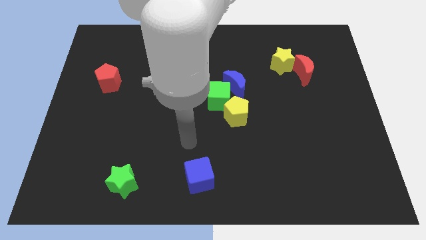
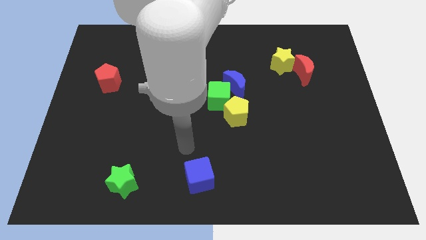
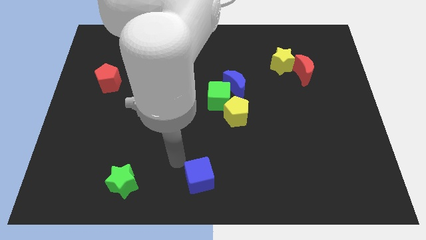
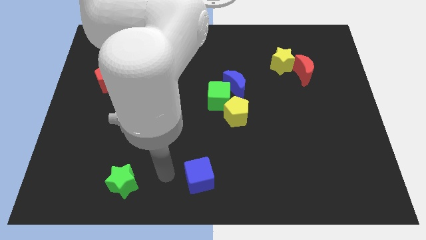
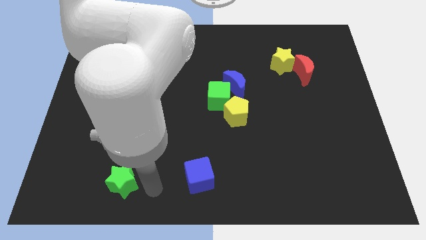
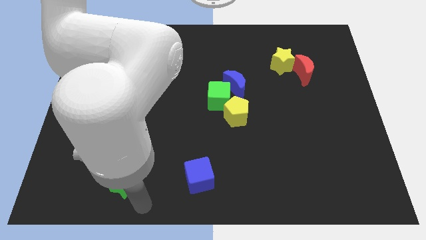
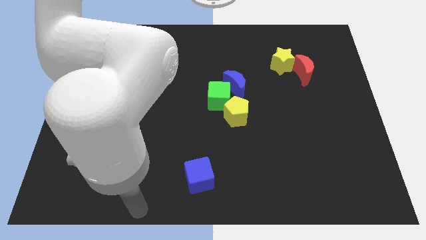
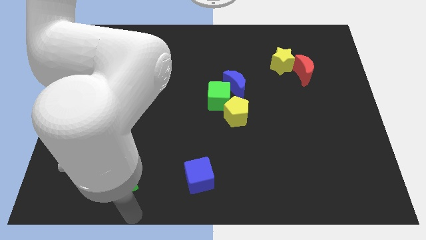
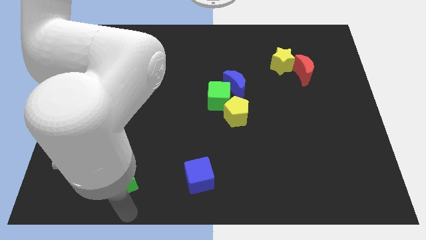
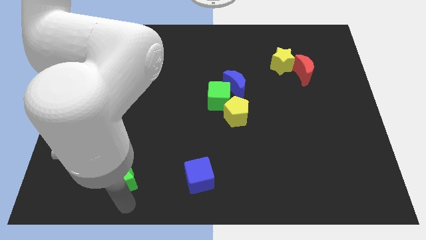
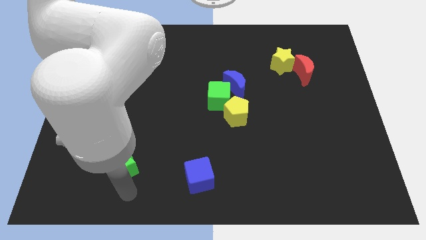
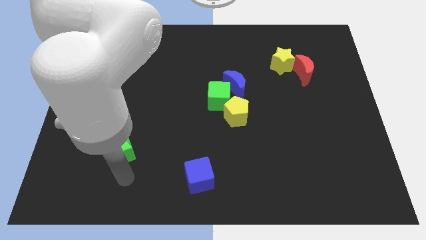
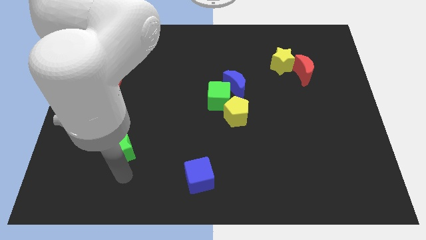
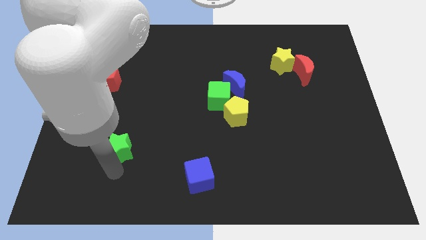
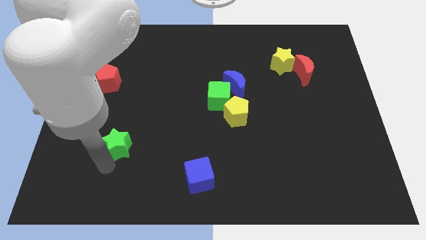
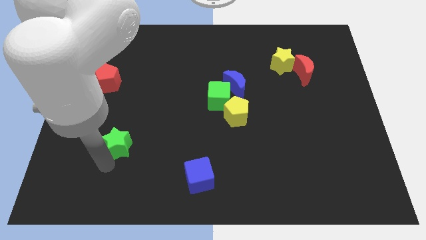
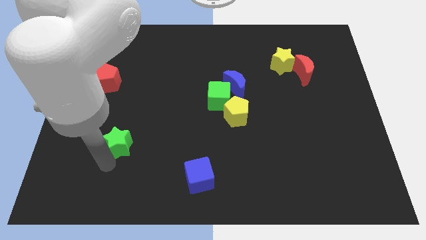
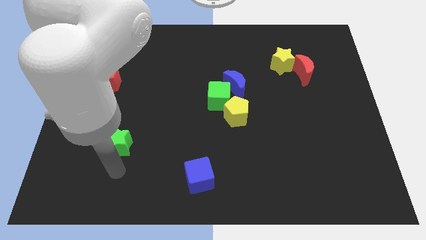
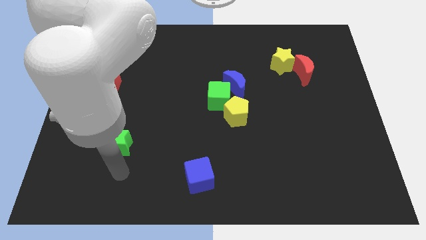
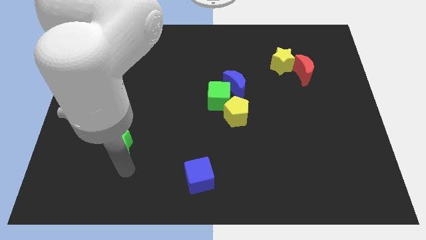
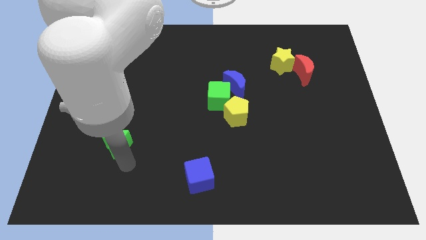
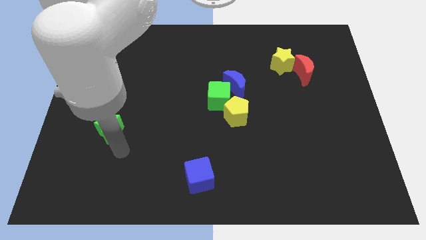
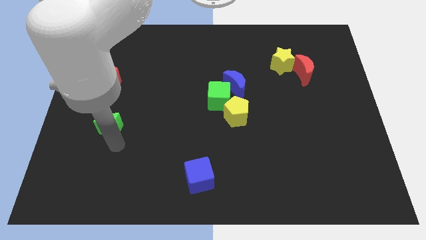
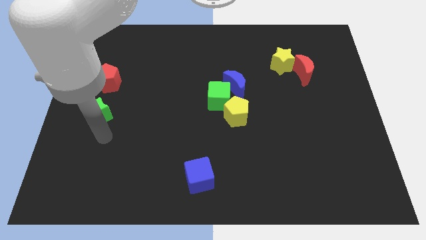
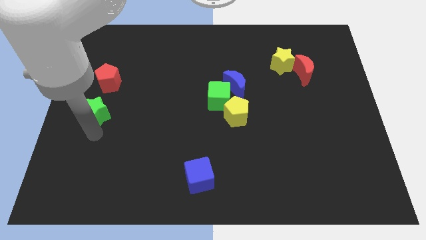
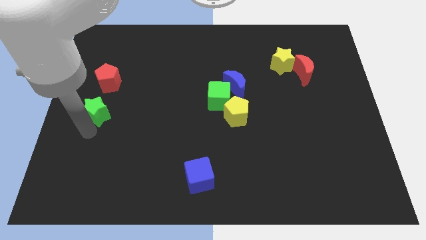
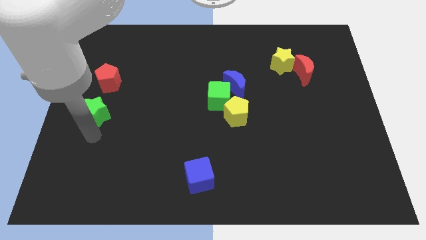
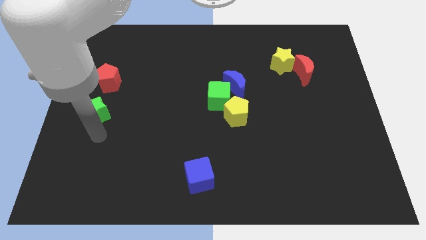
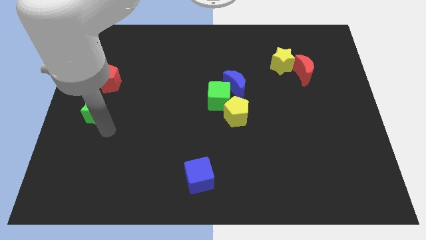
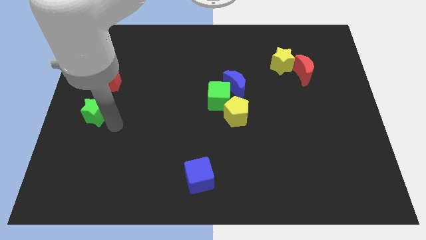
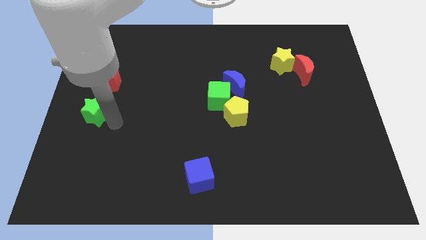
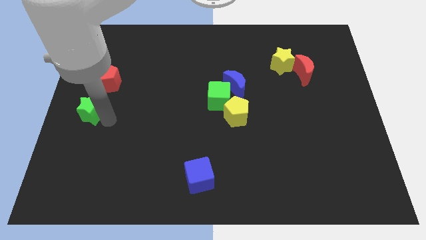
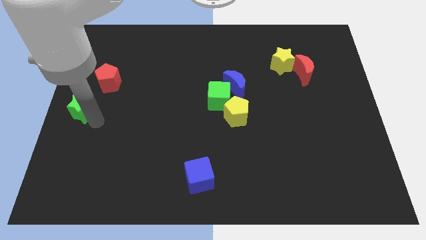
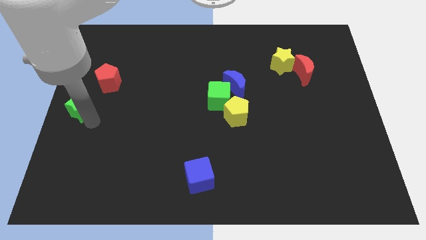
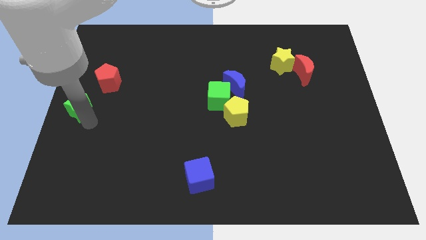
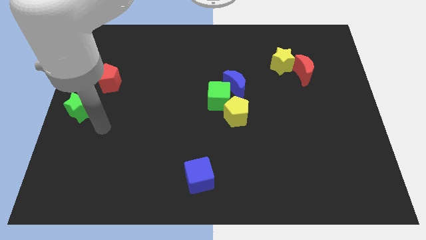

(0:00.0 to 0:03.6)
move the green star diagonally towards the red pentagon

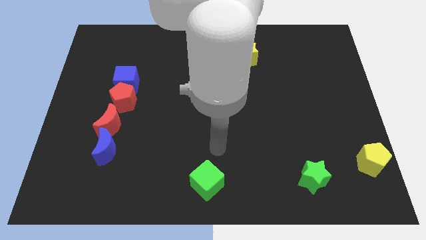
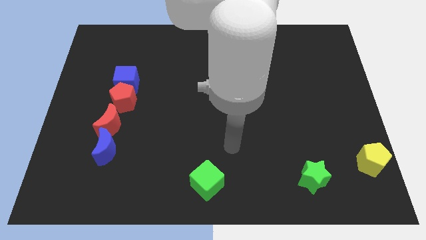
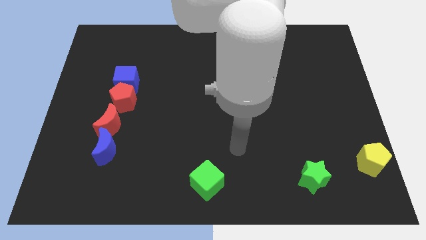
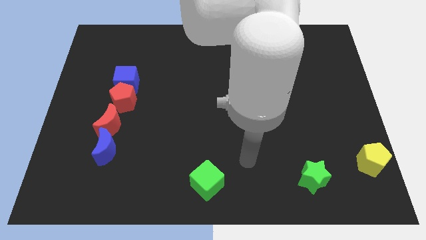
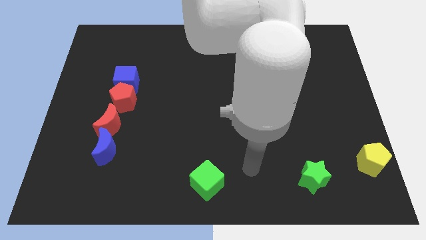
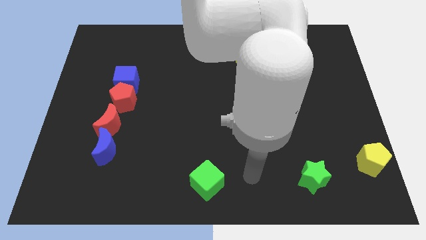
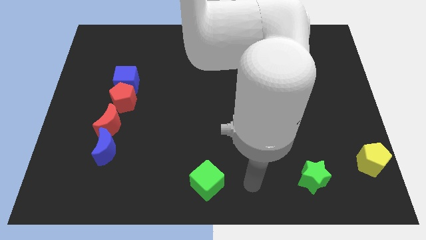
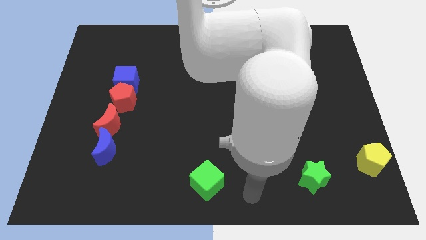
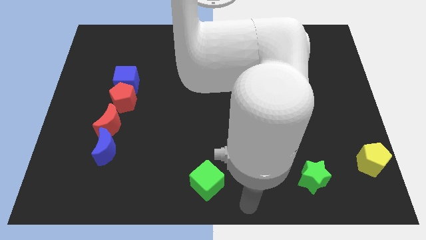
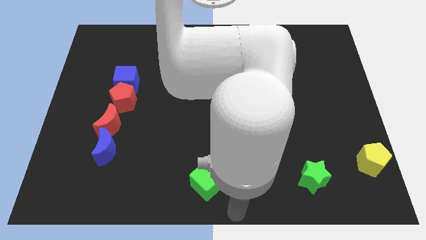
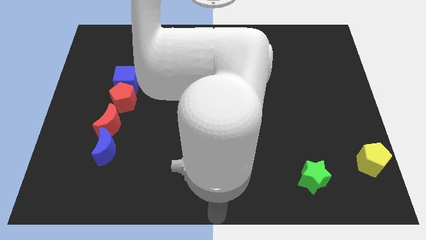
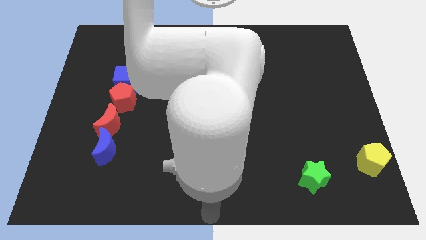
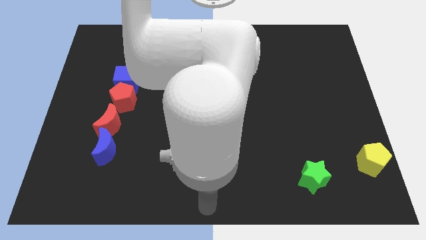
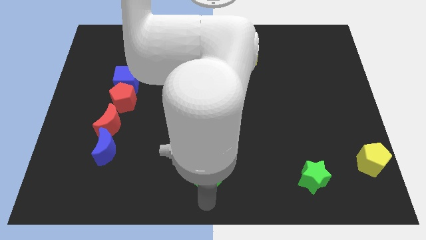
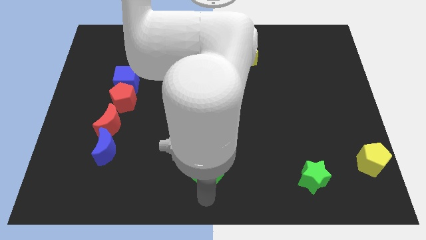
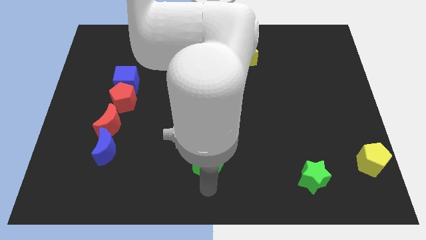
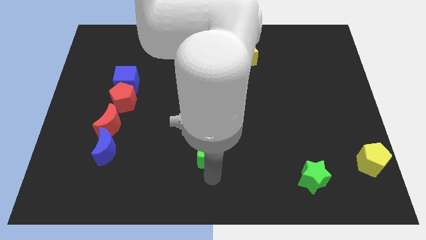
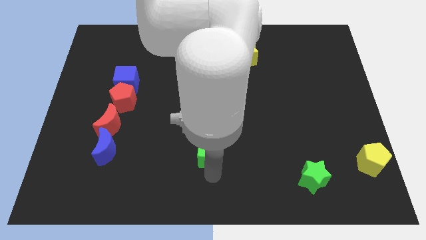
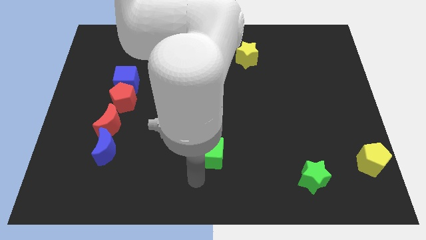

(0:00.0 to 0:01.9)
push the green cube upwards

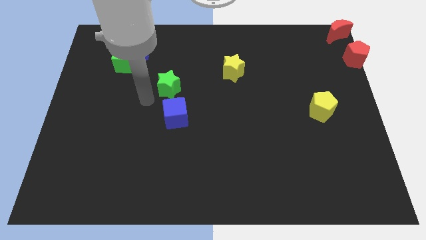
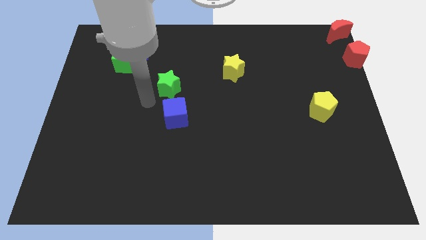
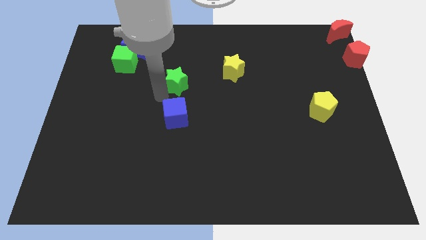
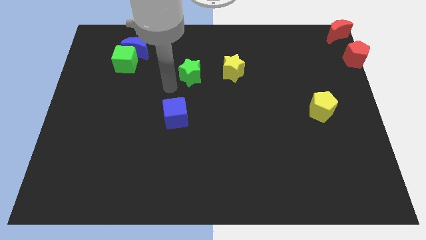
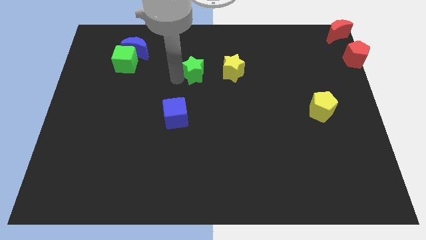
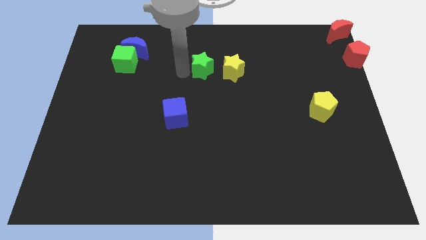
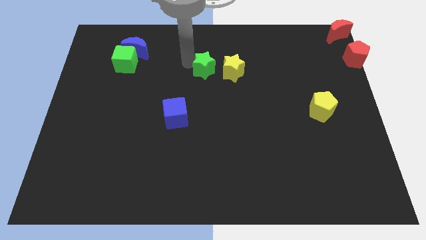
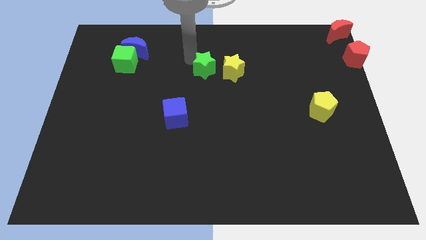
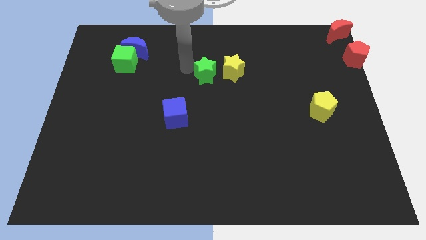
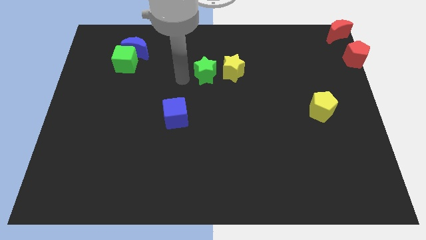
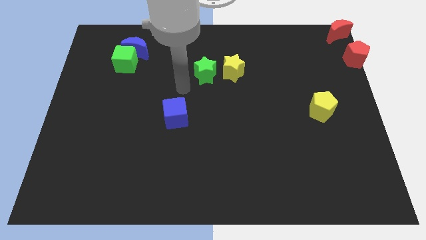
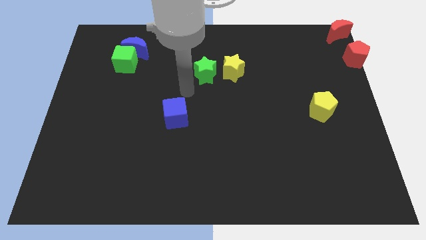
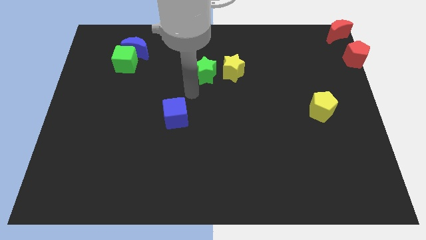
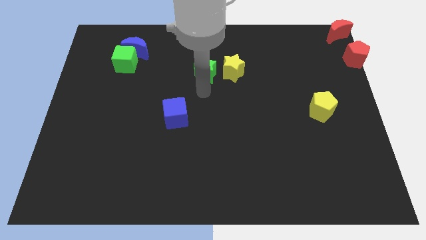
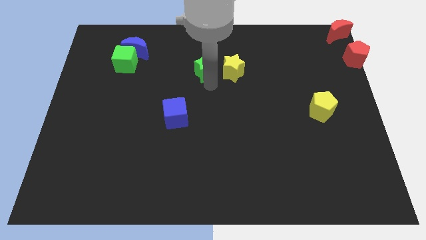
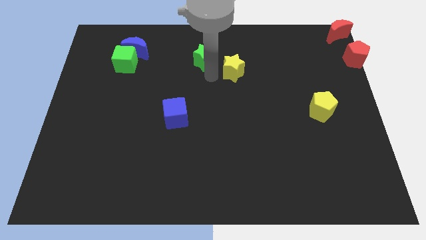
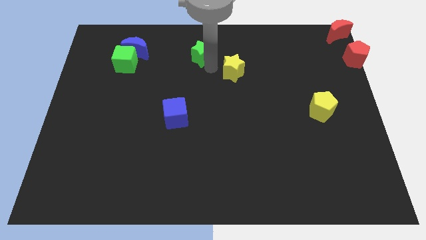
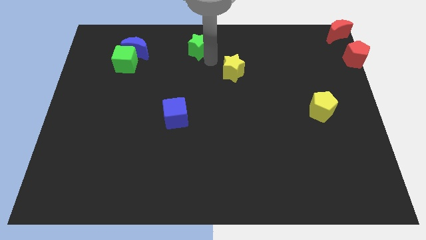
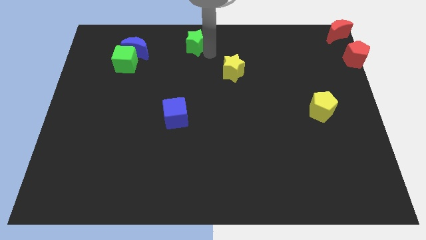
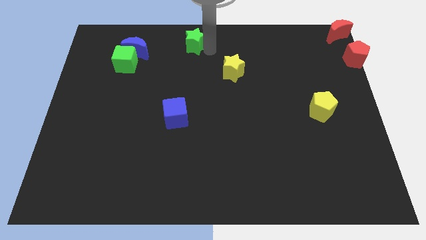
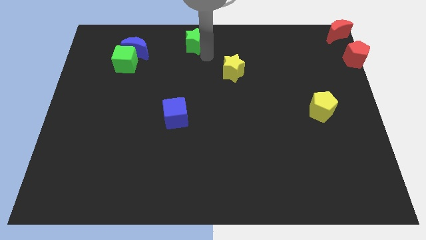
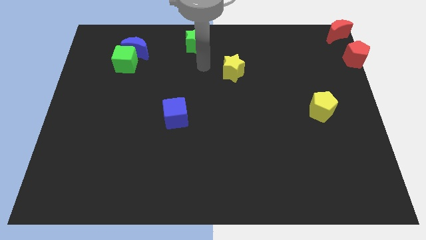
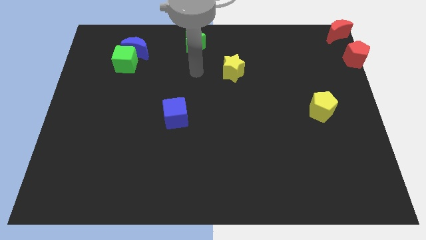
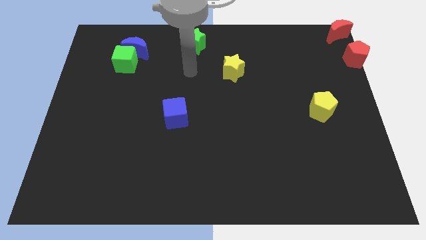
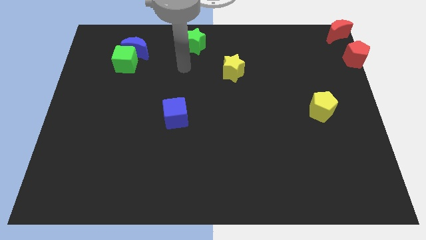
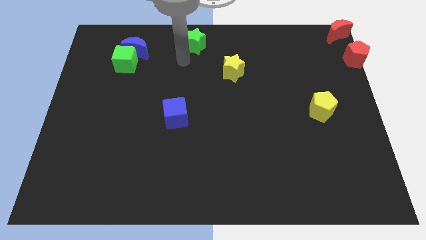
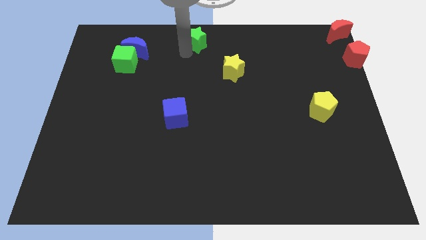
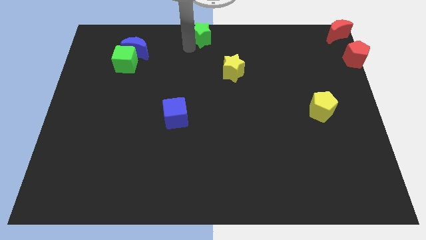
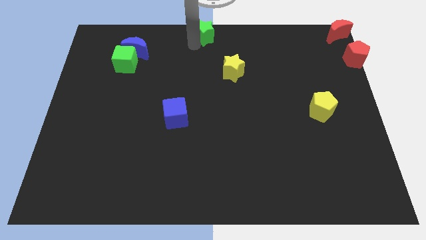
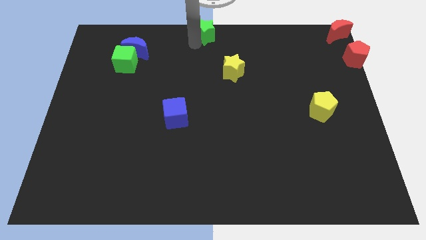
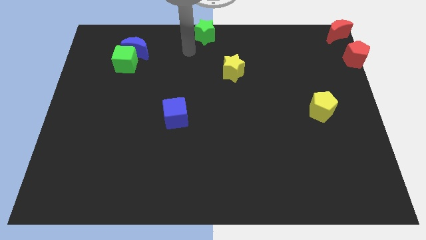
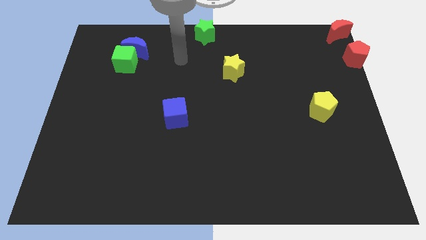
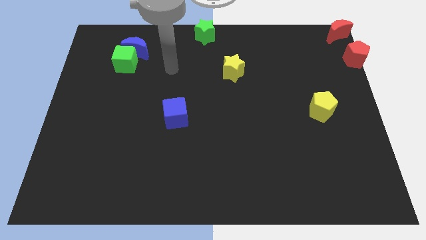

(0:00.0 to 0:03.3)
push the green star to the top center of the board

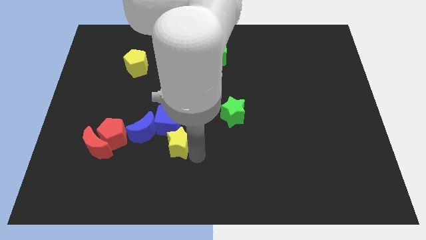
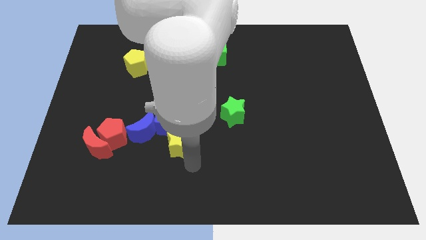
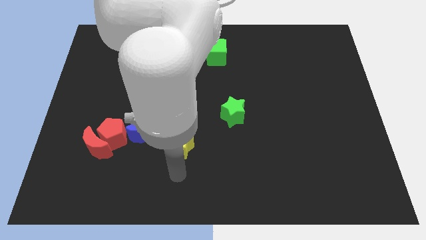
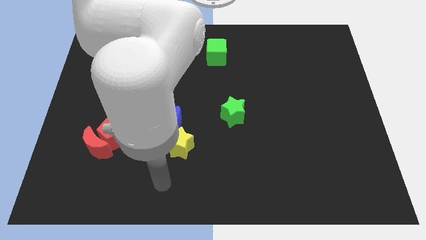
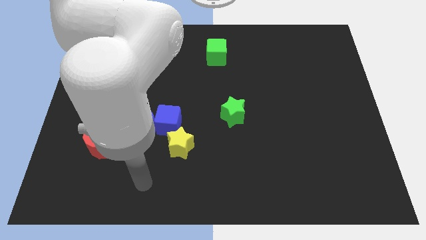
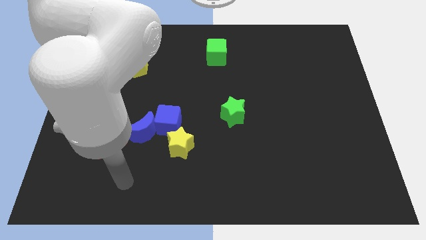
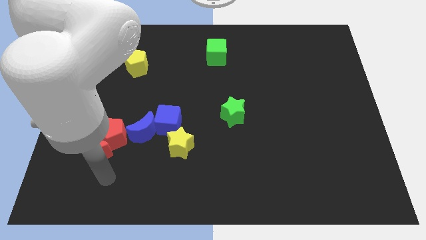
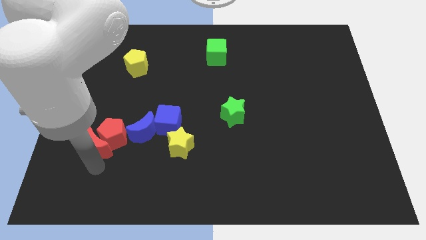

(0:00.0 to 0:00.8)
point your arm at the bottom of the red crescent
